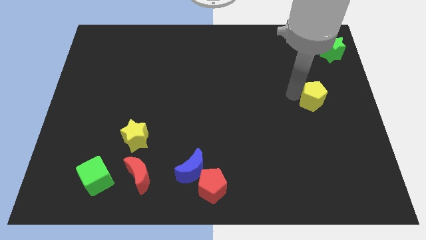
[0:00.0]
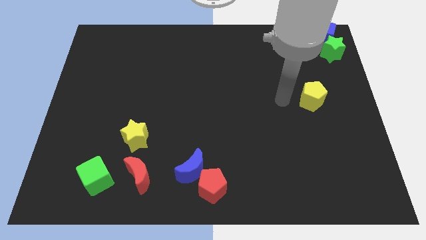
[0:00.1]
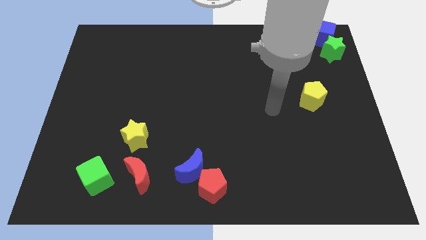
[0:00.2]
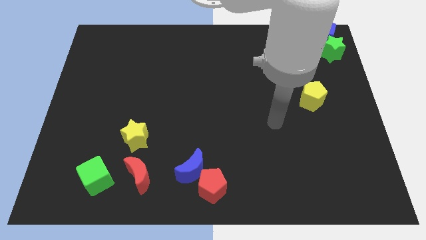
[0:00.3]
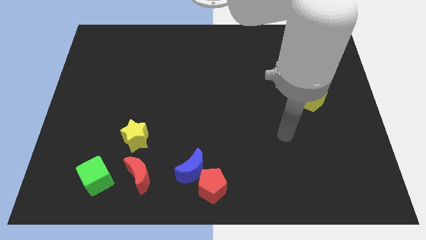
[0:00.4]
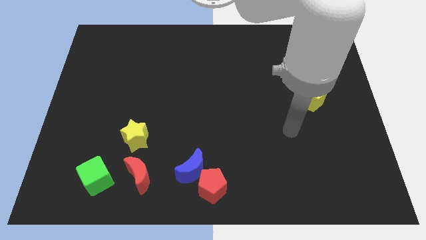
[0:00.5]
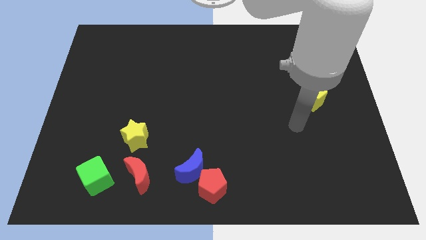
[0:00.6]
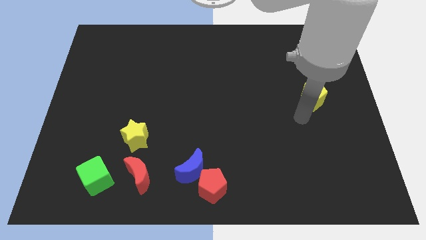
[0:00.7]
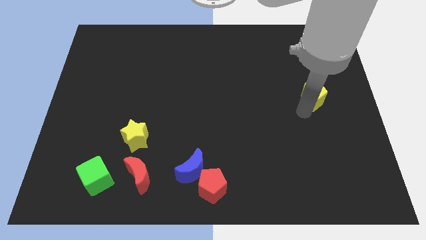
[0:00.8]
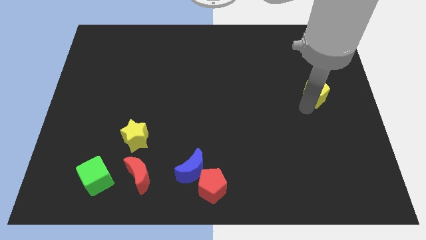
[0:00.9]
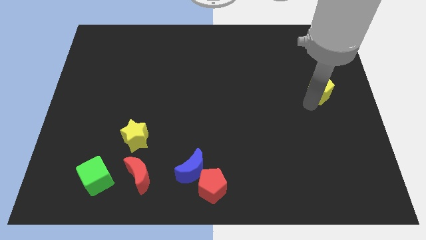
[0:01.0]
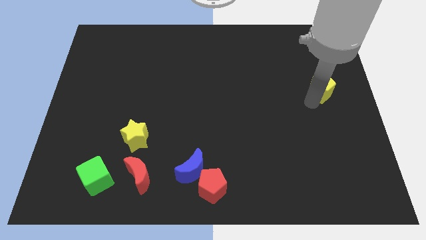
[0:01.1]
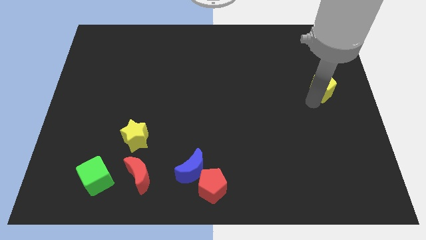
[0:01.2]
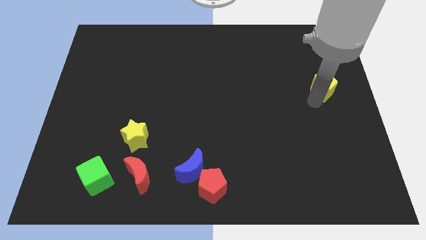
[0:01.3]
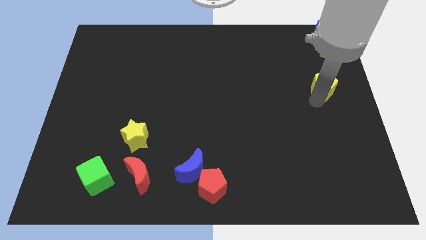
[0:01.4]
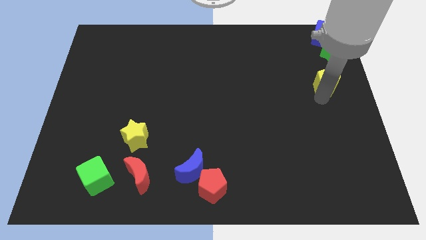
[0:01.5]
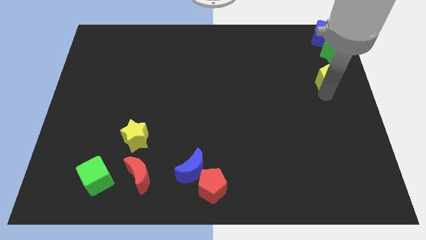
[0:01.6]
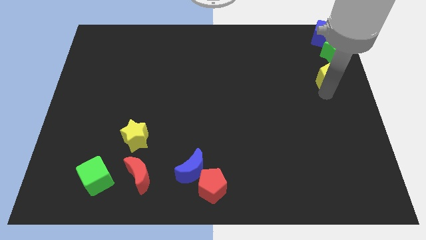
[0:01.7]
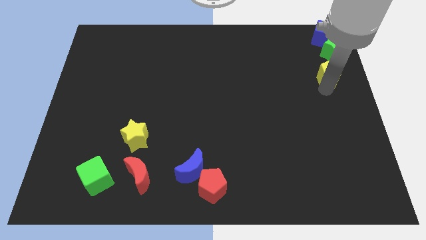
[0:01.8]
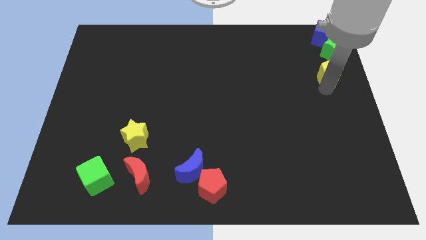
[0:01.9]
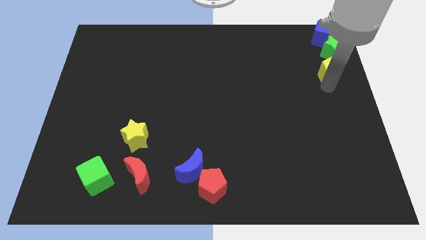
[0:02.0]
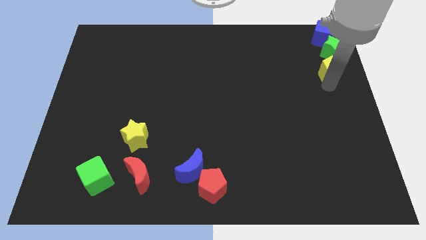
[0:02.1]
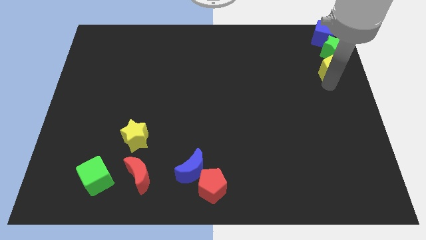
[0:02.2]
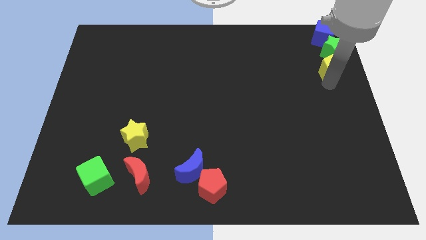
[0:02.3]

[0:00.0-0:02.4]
push the yellow pentagon below the green star

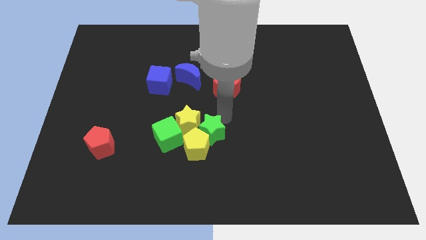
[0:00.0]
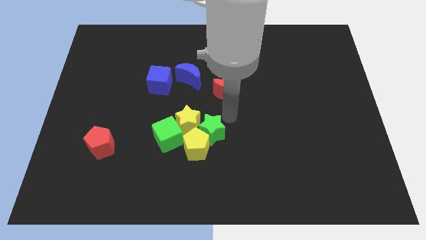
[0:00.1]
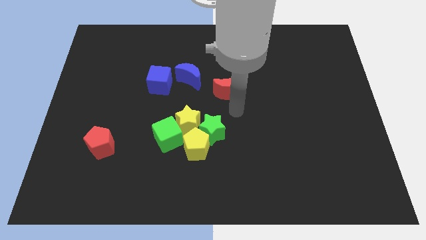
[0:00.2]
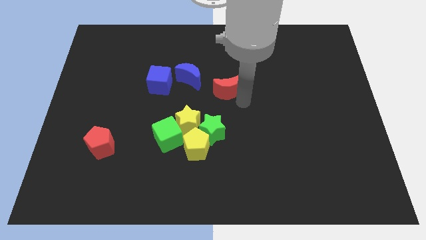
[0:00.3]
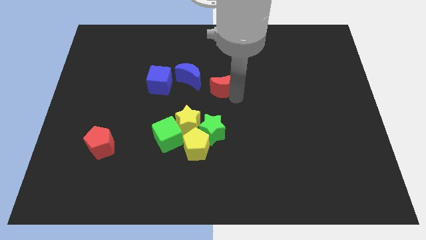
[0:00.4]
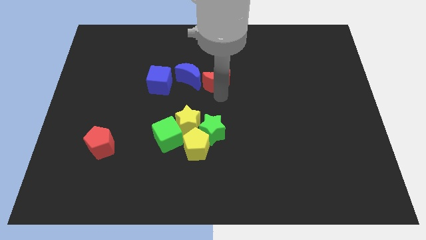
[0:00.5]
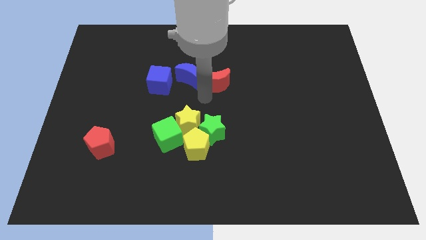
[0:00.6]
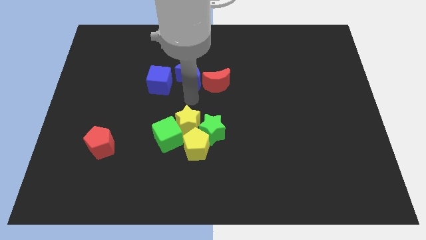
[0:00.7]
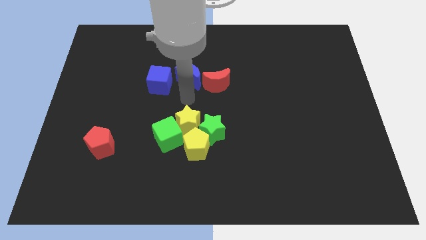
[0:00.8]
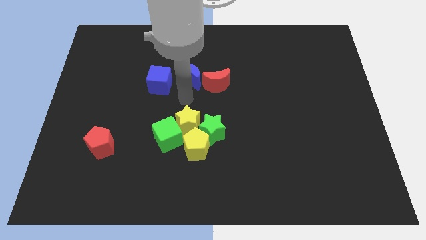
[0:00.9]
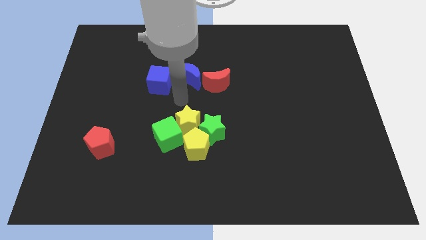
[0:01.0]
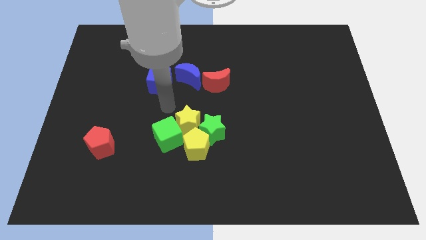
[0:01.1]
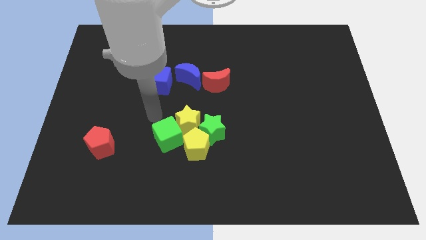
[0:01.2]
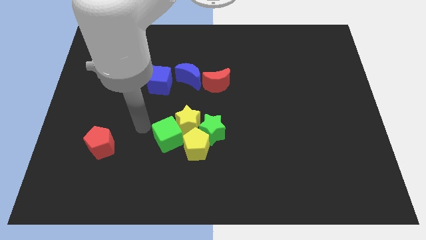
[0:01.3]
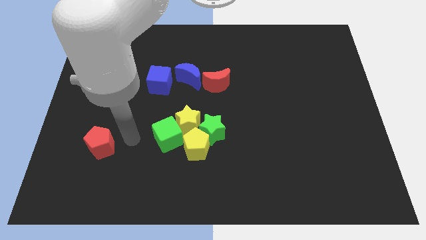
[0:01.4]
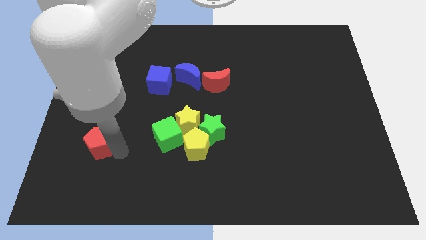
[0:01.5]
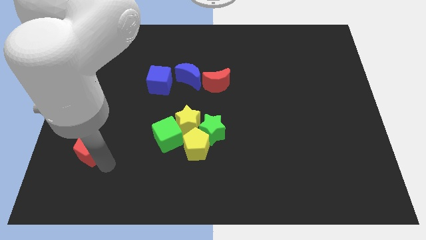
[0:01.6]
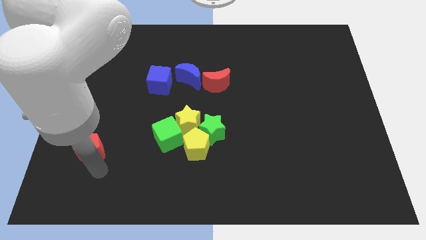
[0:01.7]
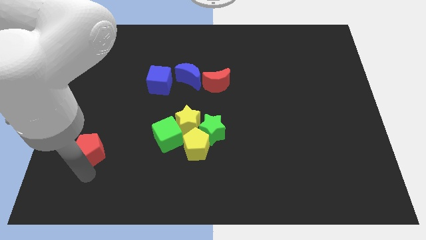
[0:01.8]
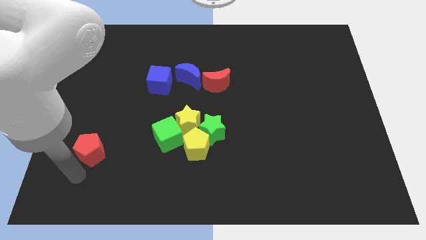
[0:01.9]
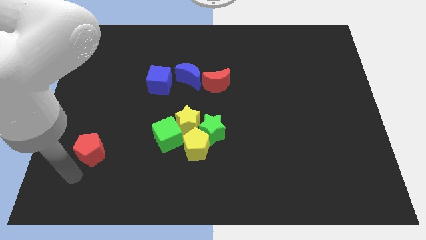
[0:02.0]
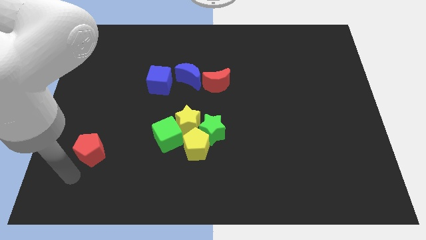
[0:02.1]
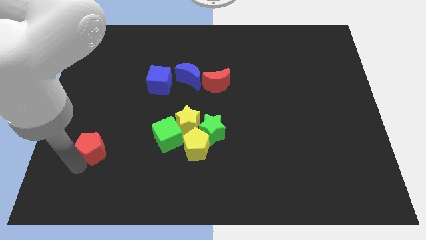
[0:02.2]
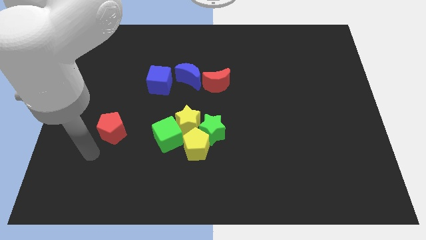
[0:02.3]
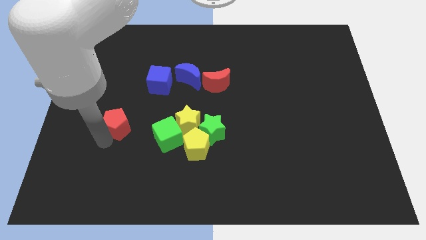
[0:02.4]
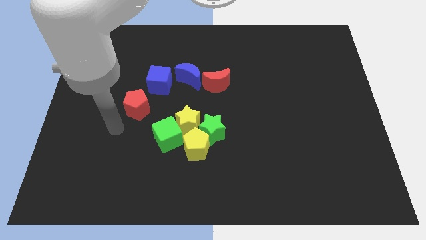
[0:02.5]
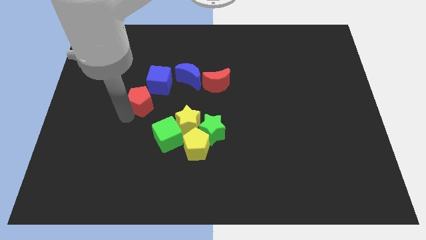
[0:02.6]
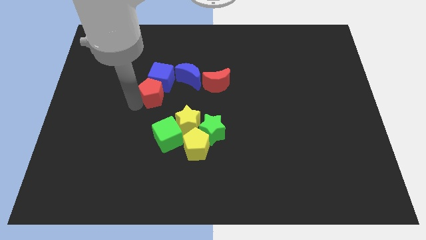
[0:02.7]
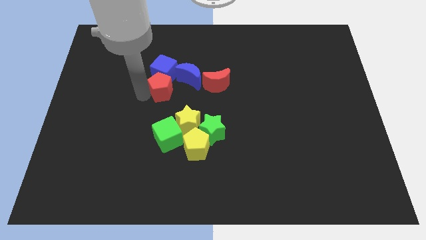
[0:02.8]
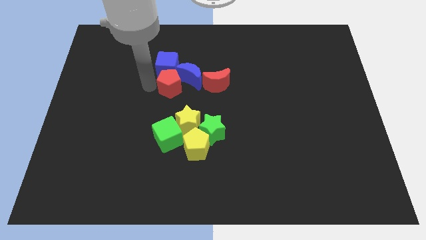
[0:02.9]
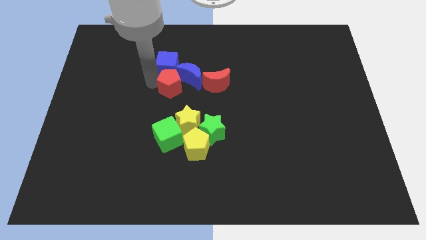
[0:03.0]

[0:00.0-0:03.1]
arrange the red blocks near to blue blocks

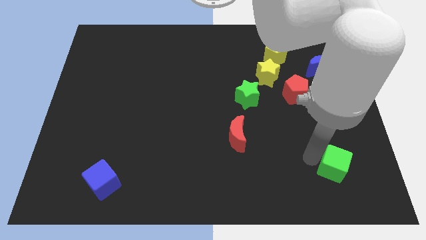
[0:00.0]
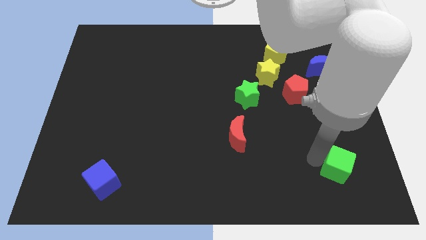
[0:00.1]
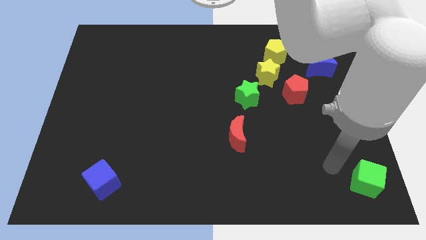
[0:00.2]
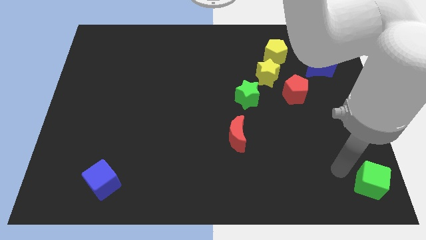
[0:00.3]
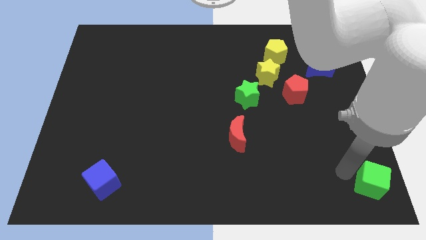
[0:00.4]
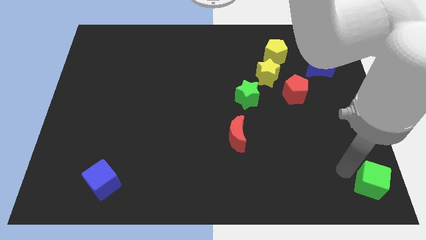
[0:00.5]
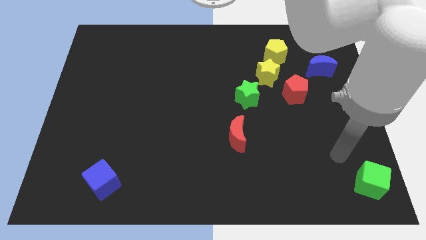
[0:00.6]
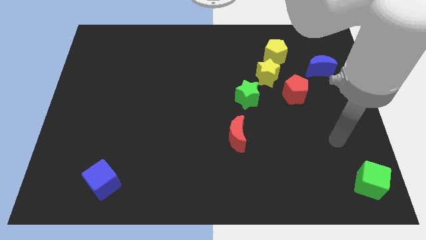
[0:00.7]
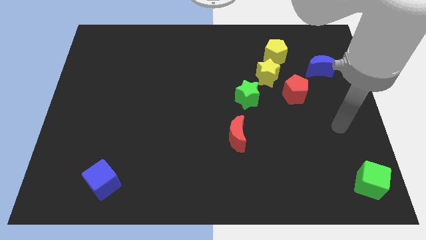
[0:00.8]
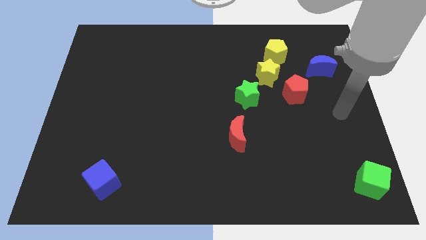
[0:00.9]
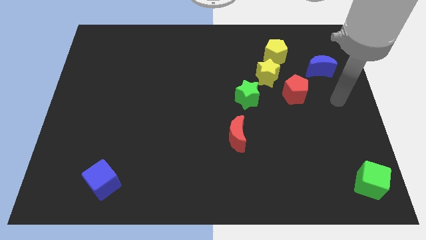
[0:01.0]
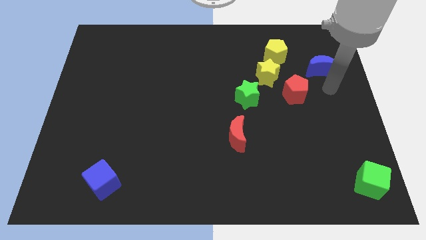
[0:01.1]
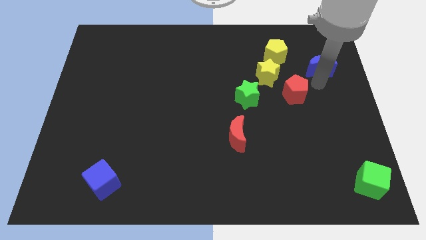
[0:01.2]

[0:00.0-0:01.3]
drag the green cube towards the bottom right corner

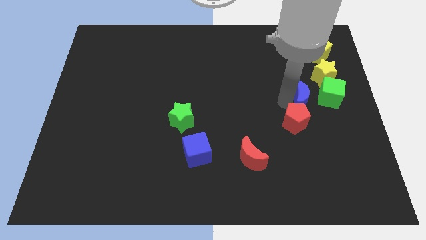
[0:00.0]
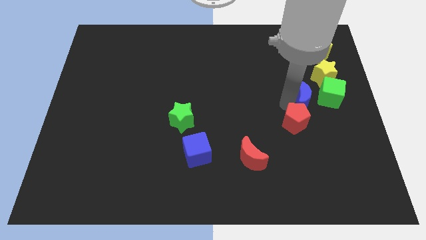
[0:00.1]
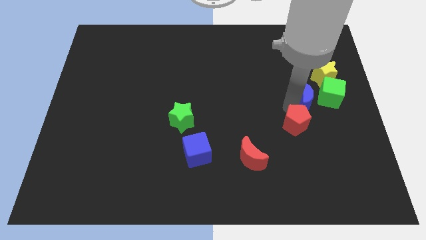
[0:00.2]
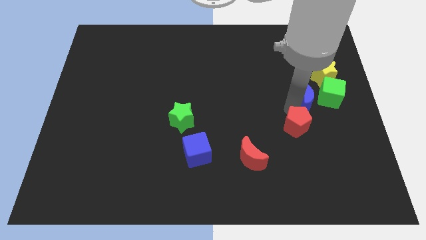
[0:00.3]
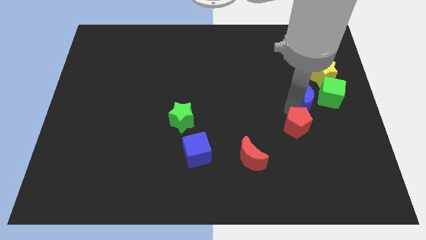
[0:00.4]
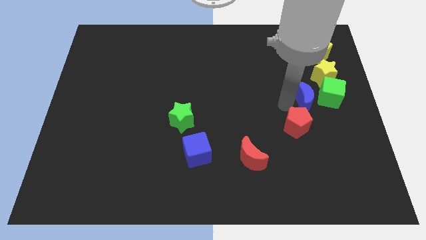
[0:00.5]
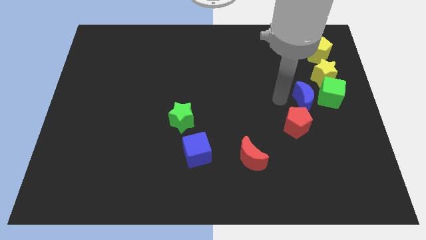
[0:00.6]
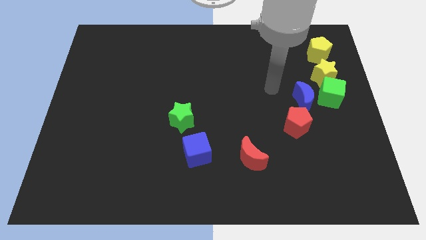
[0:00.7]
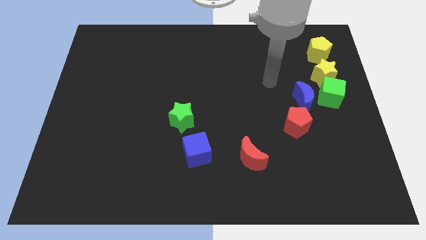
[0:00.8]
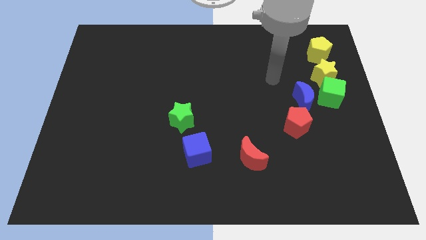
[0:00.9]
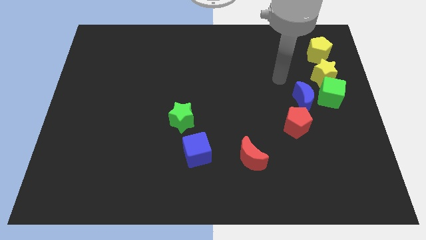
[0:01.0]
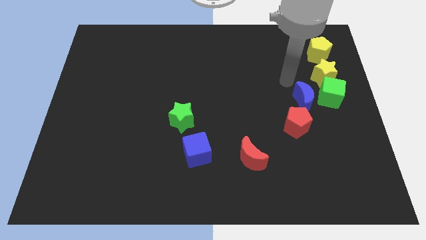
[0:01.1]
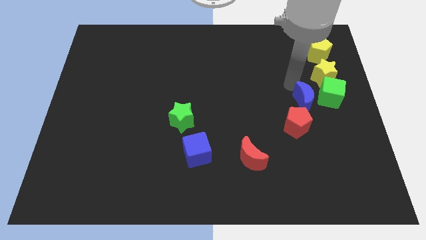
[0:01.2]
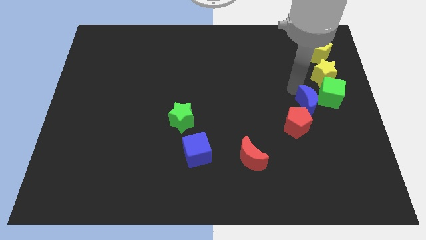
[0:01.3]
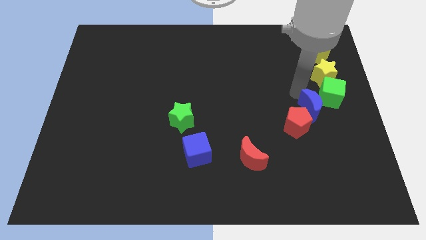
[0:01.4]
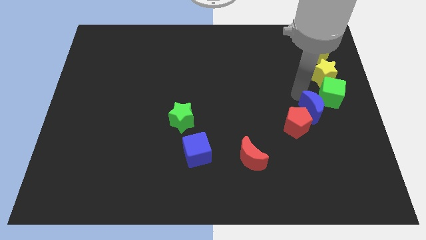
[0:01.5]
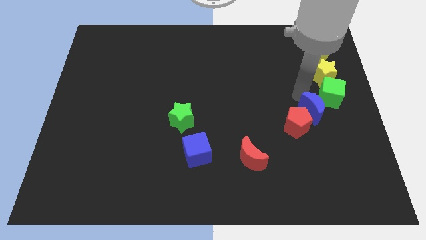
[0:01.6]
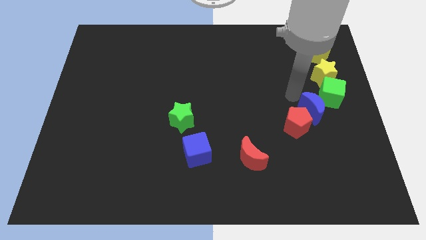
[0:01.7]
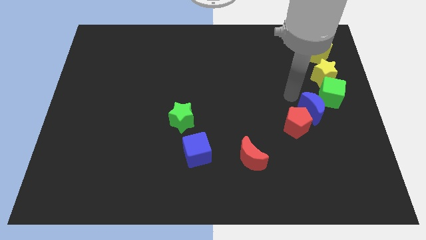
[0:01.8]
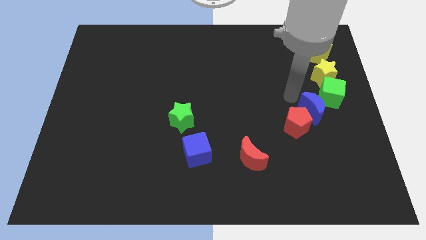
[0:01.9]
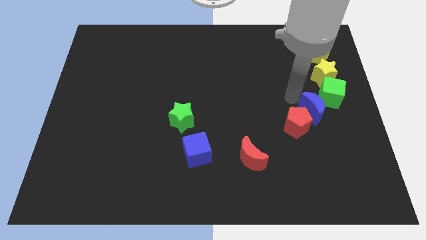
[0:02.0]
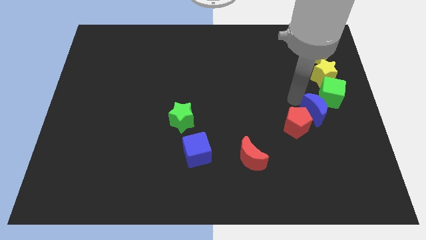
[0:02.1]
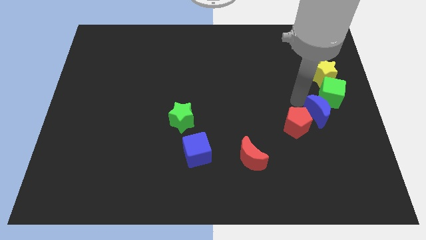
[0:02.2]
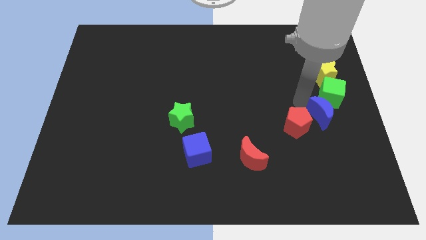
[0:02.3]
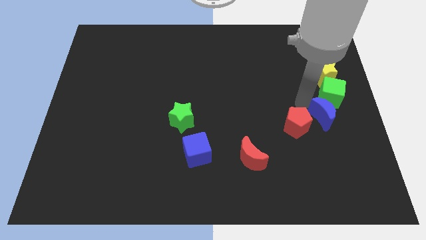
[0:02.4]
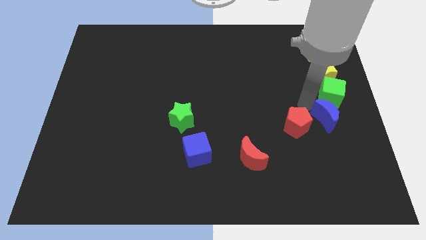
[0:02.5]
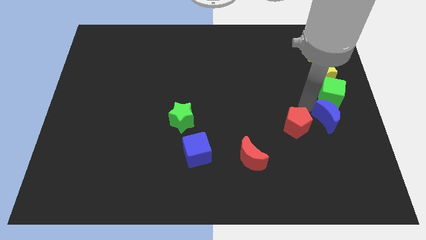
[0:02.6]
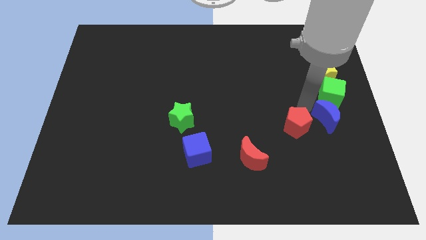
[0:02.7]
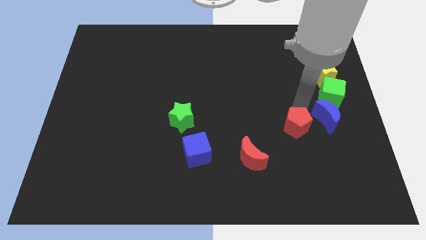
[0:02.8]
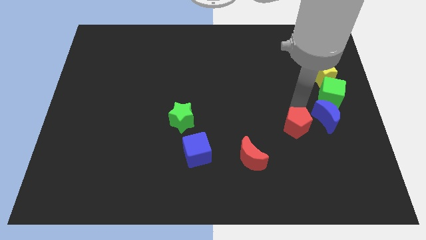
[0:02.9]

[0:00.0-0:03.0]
move the blue crescent towards center right
